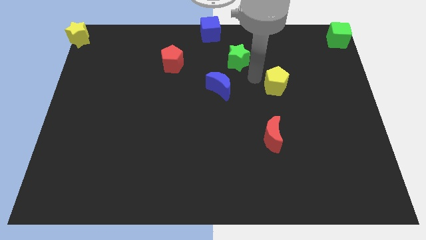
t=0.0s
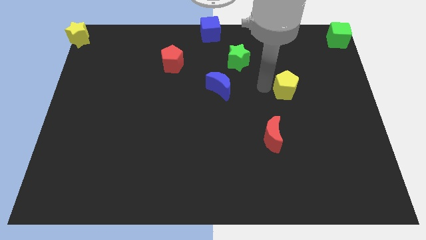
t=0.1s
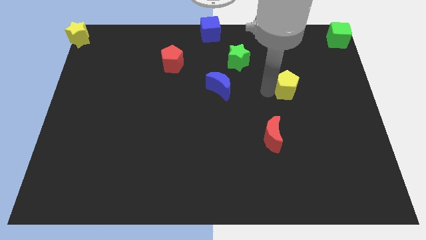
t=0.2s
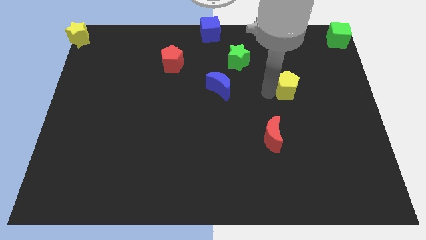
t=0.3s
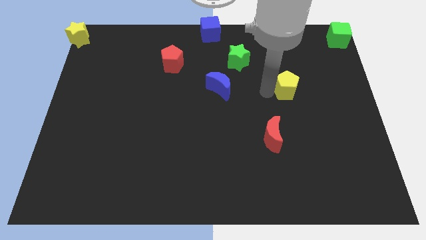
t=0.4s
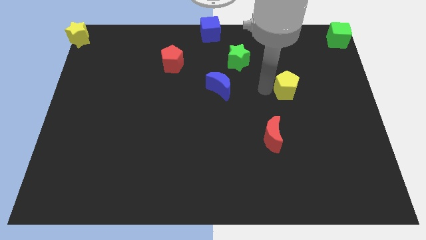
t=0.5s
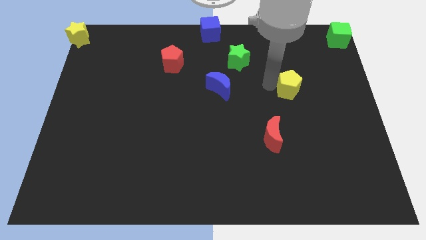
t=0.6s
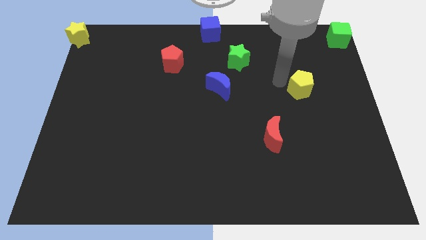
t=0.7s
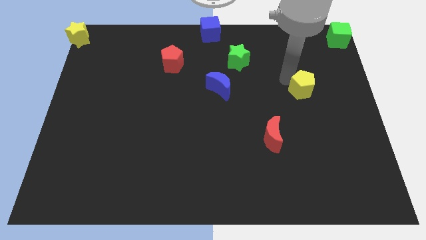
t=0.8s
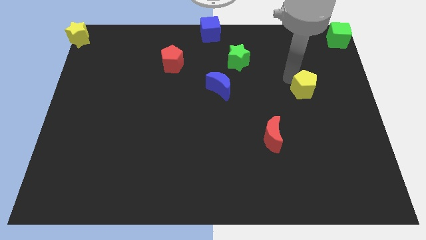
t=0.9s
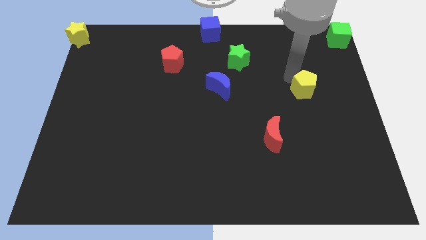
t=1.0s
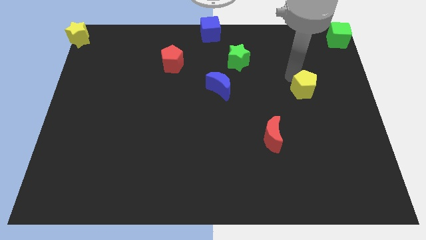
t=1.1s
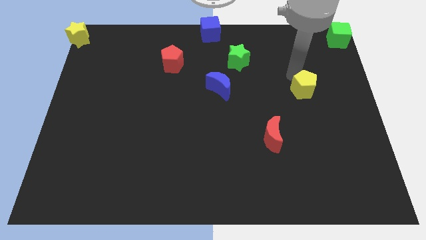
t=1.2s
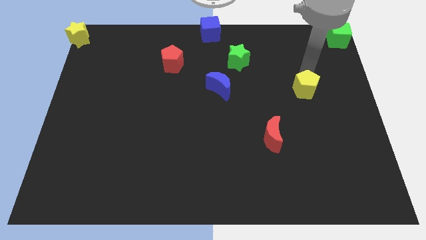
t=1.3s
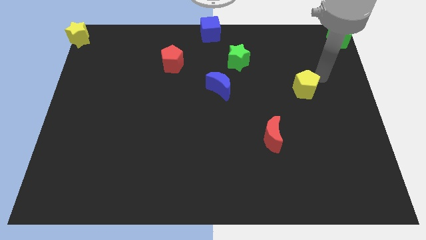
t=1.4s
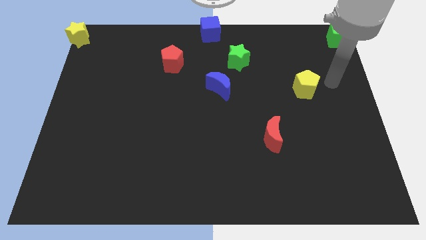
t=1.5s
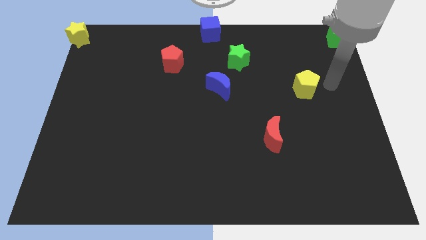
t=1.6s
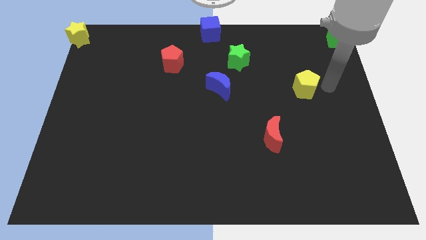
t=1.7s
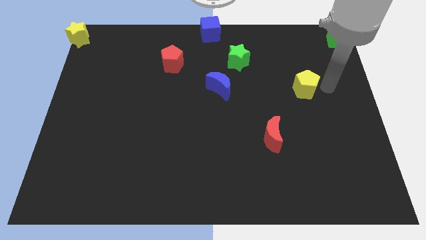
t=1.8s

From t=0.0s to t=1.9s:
place the yellow pentagon between the red moon and green cube

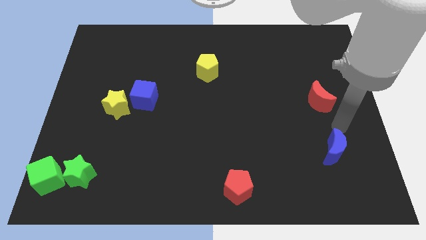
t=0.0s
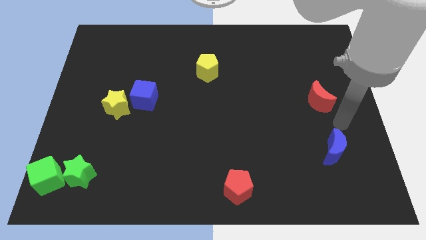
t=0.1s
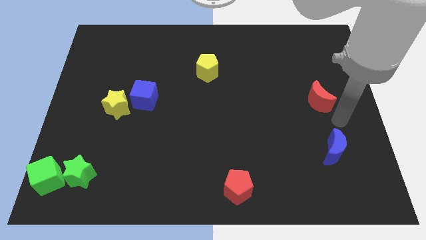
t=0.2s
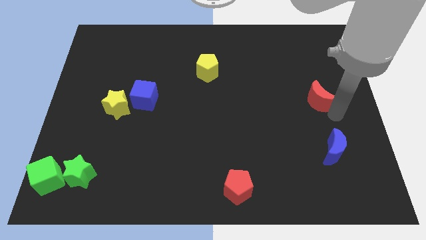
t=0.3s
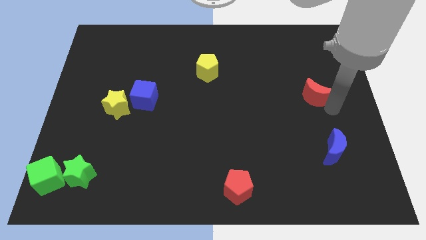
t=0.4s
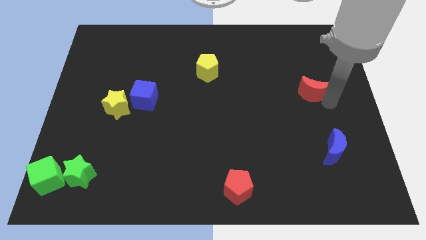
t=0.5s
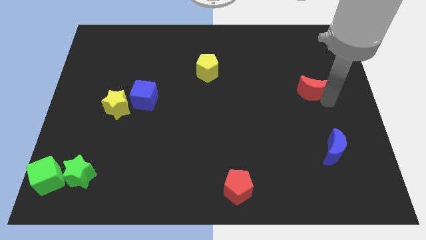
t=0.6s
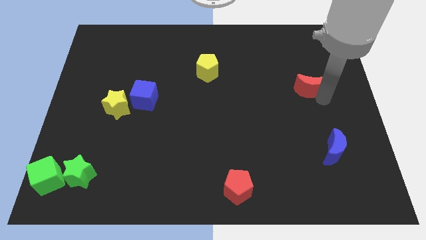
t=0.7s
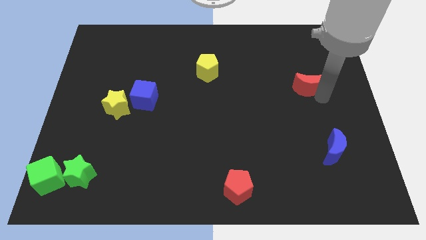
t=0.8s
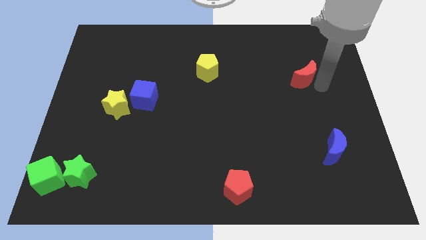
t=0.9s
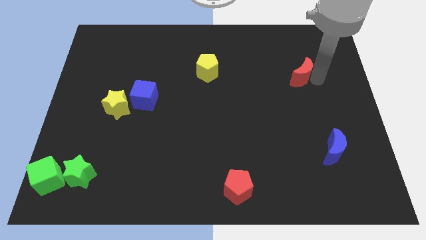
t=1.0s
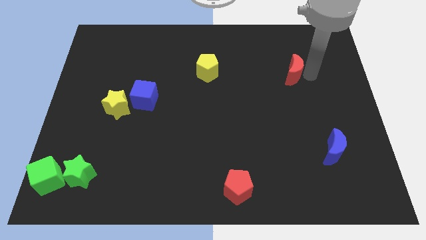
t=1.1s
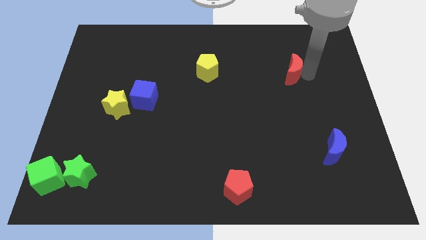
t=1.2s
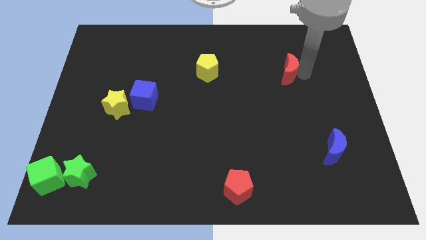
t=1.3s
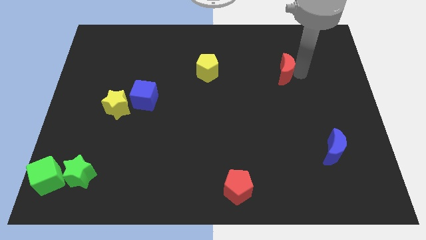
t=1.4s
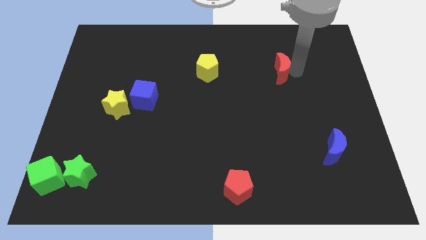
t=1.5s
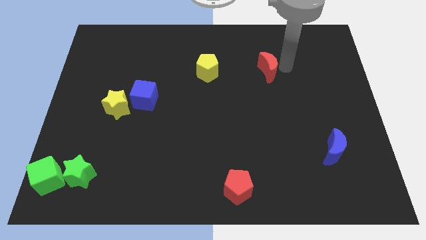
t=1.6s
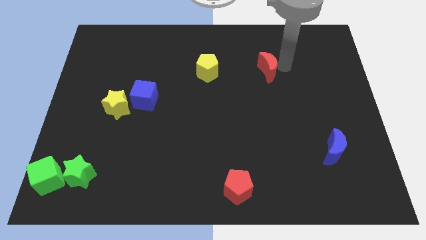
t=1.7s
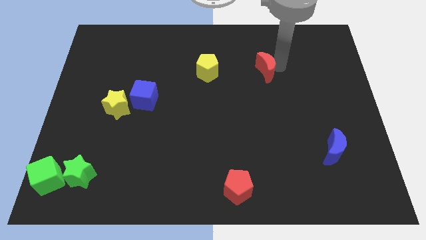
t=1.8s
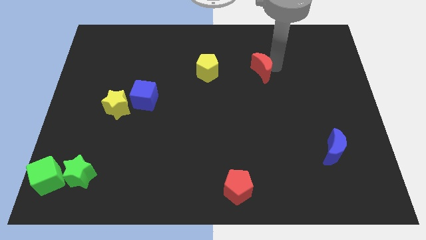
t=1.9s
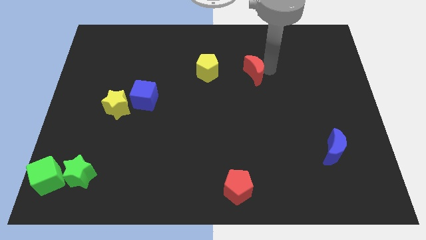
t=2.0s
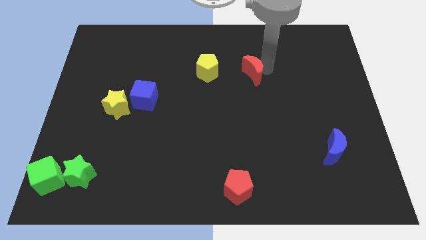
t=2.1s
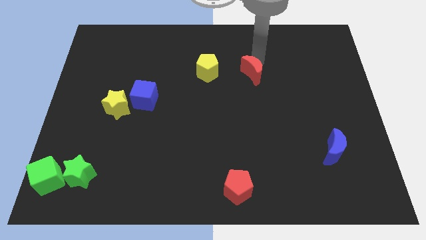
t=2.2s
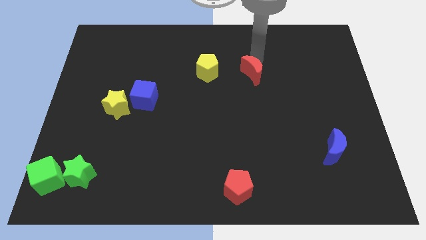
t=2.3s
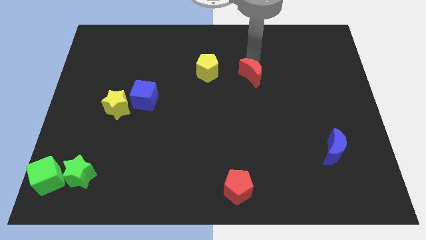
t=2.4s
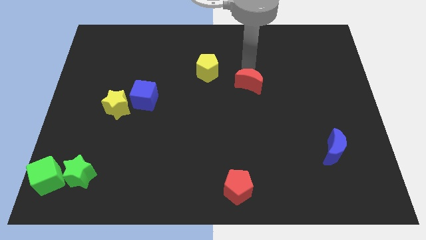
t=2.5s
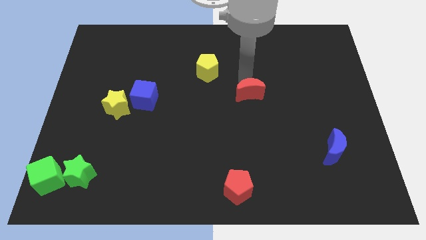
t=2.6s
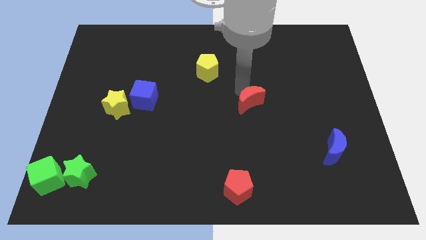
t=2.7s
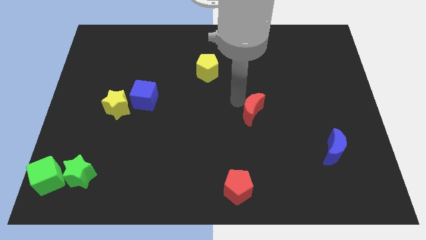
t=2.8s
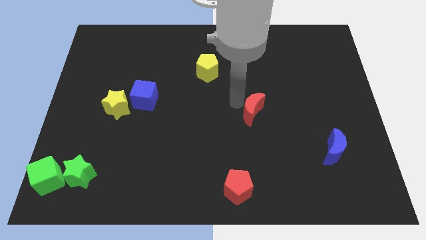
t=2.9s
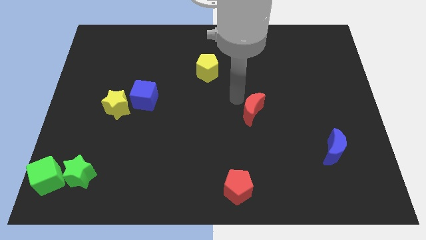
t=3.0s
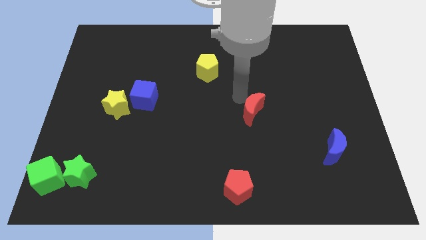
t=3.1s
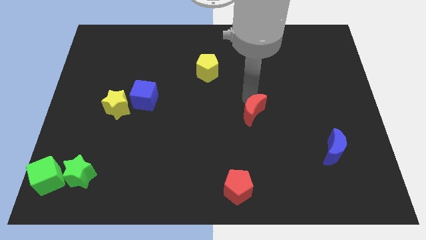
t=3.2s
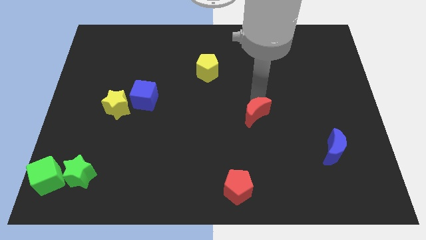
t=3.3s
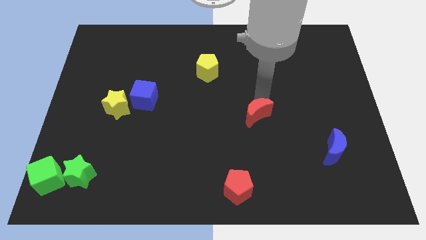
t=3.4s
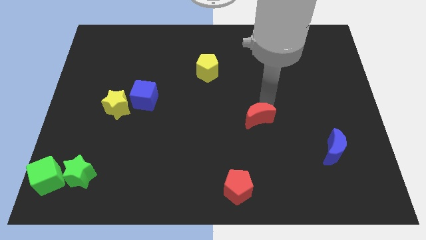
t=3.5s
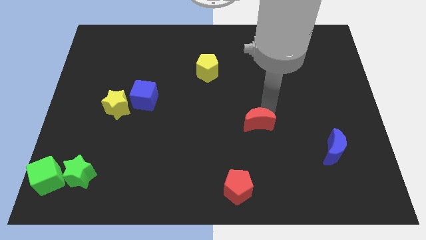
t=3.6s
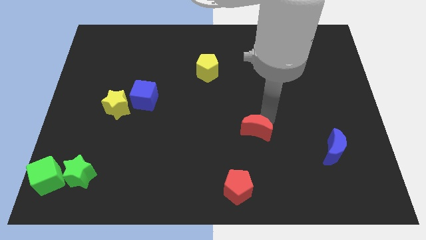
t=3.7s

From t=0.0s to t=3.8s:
drag the red crescent towards the center

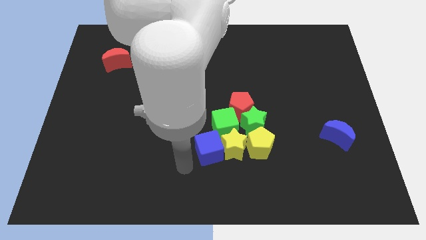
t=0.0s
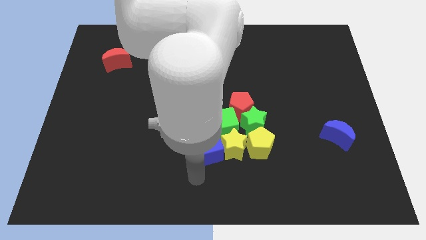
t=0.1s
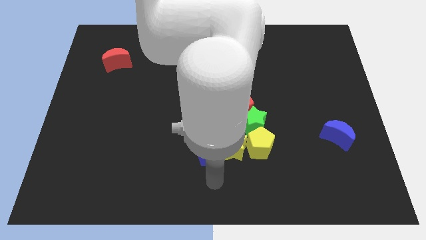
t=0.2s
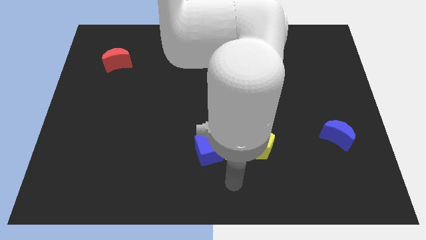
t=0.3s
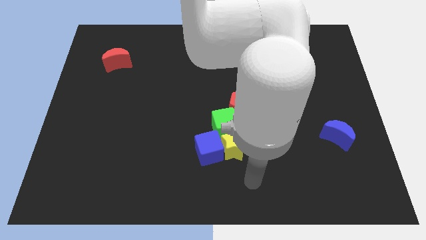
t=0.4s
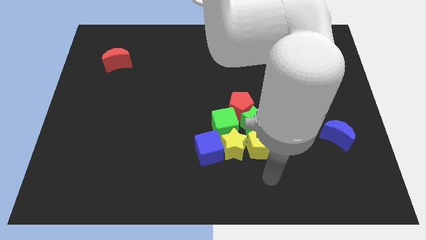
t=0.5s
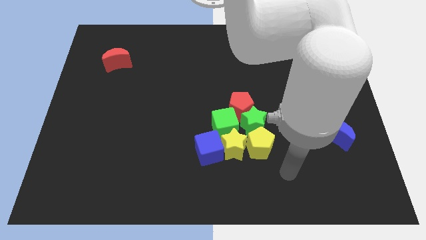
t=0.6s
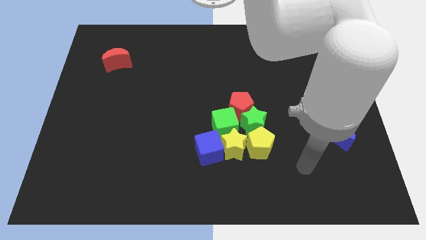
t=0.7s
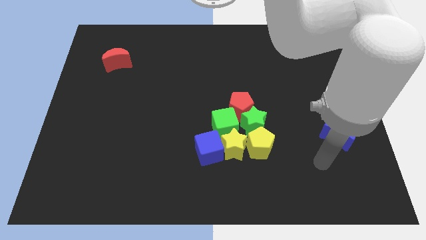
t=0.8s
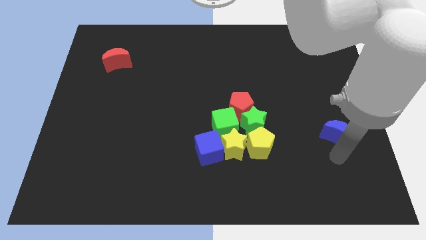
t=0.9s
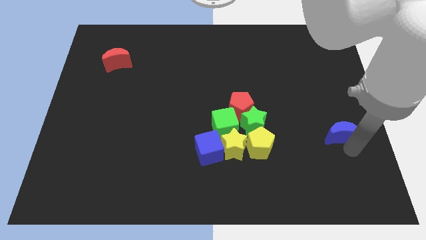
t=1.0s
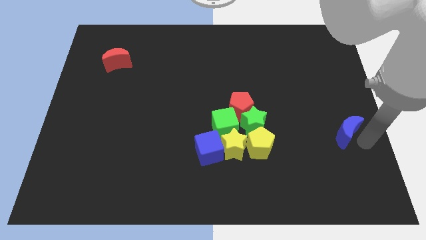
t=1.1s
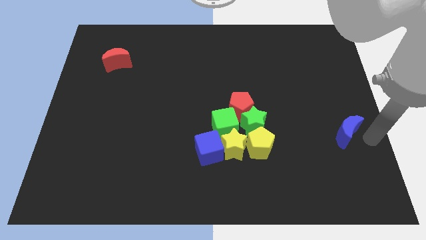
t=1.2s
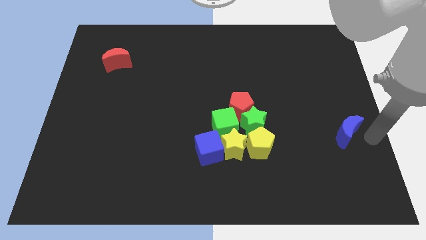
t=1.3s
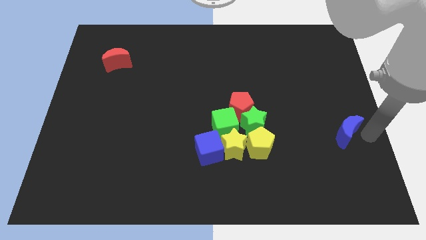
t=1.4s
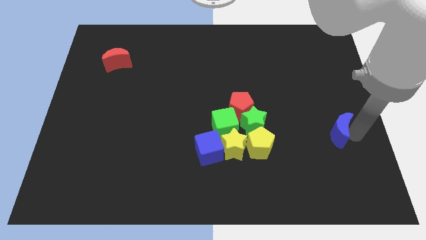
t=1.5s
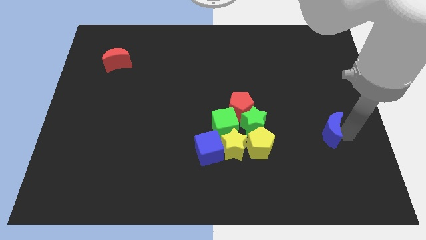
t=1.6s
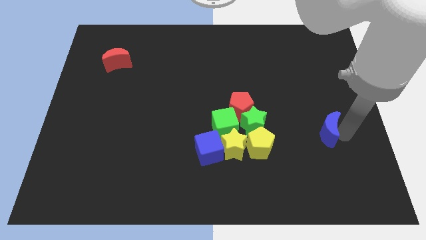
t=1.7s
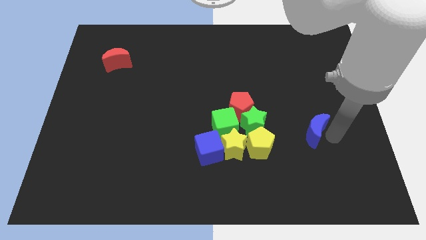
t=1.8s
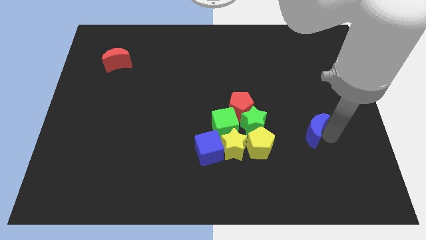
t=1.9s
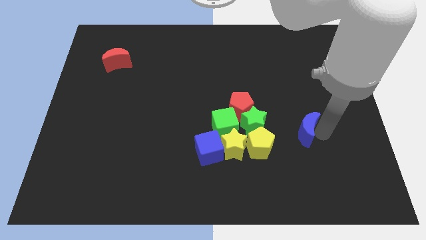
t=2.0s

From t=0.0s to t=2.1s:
push the blue crescent towards group of blocks

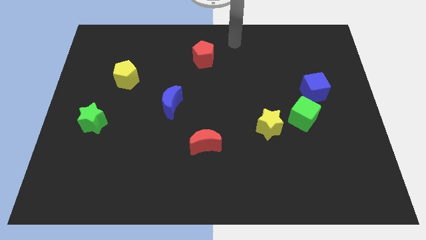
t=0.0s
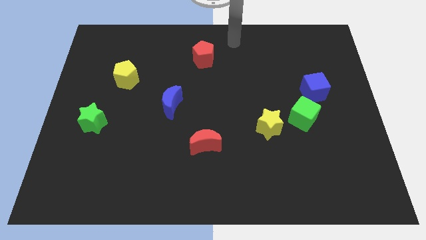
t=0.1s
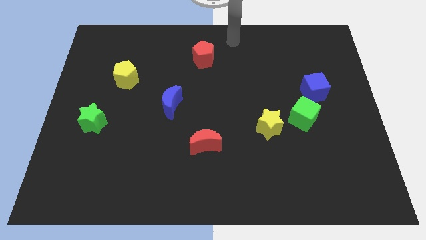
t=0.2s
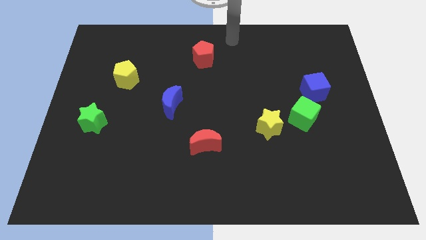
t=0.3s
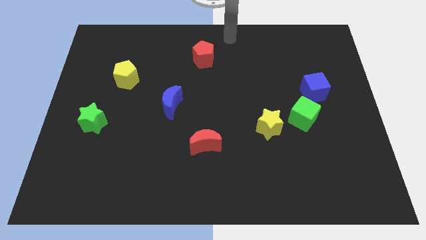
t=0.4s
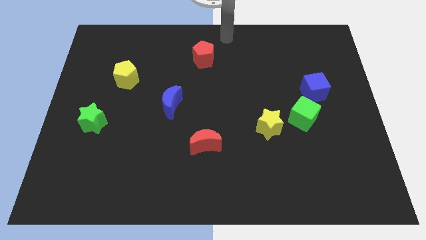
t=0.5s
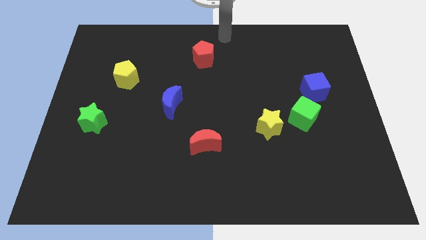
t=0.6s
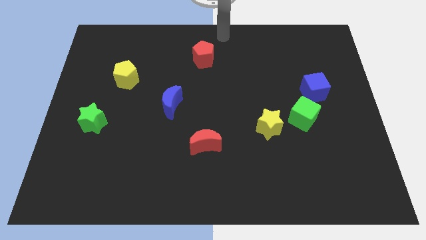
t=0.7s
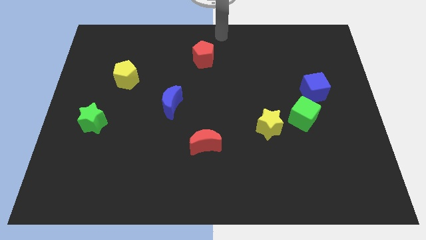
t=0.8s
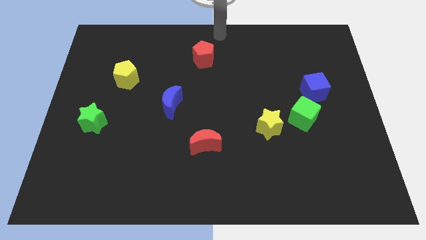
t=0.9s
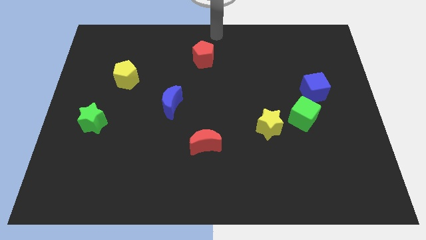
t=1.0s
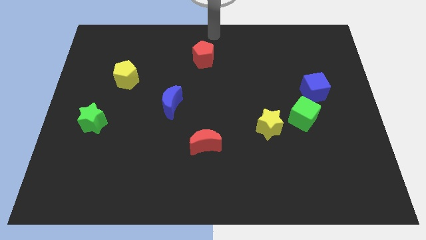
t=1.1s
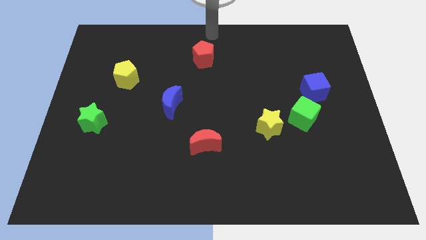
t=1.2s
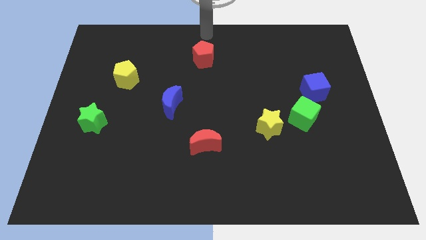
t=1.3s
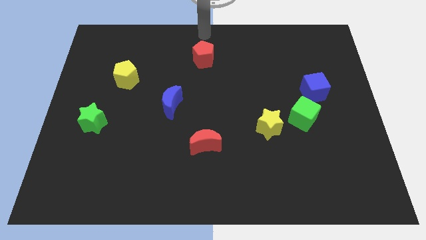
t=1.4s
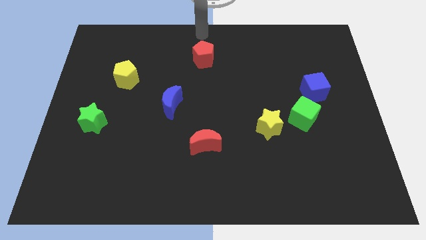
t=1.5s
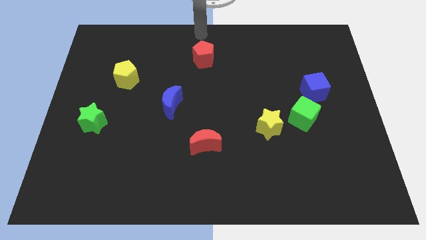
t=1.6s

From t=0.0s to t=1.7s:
put your hand above the red pentagon
